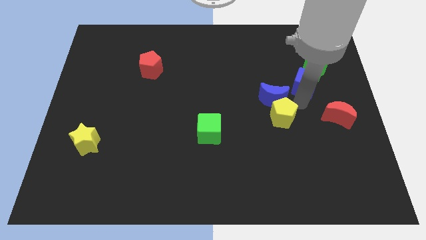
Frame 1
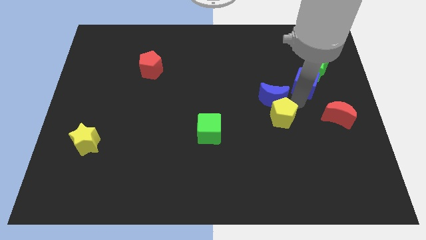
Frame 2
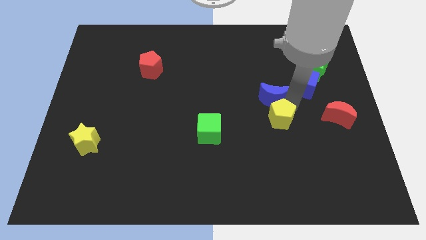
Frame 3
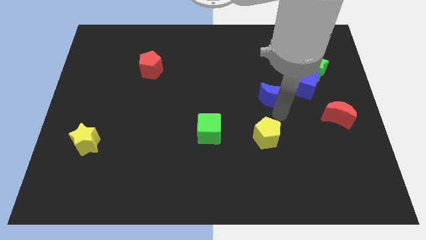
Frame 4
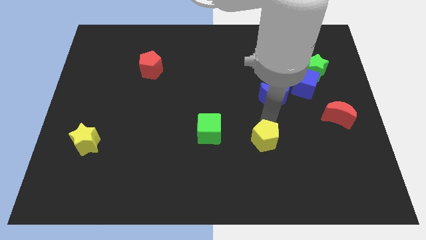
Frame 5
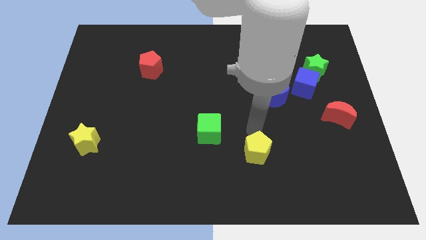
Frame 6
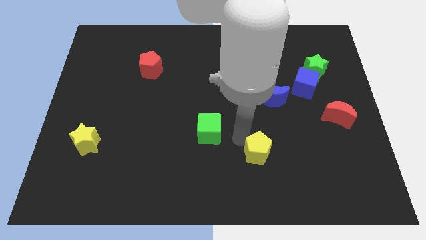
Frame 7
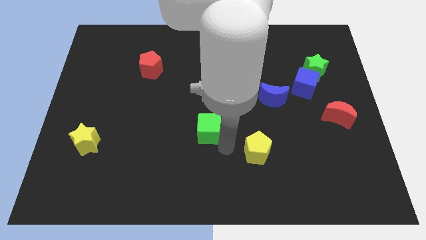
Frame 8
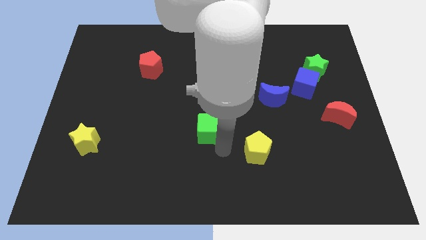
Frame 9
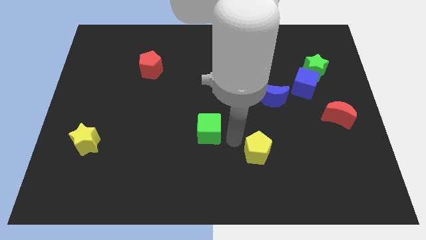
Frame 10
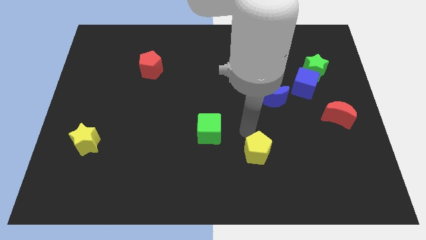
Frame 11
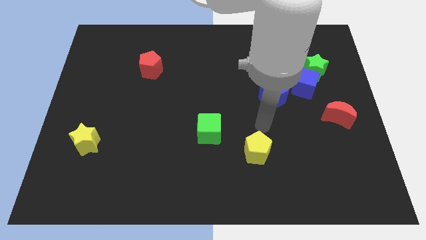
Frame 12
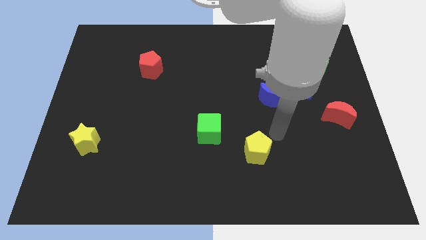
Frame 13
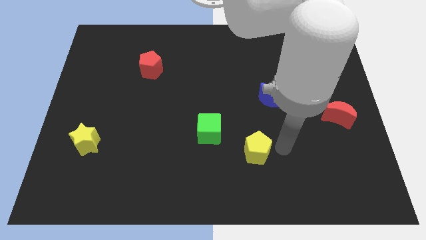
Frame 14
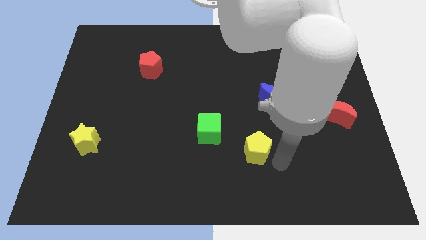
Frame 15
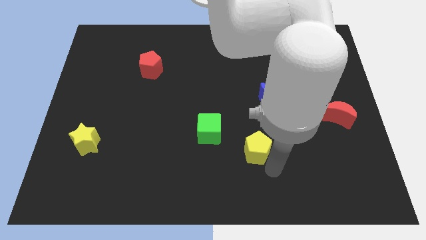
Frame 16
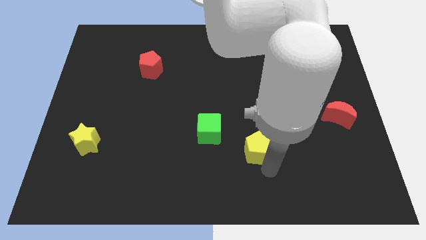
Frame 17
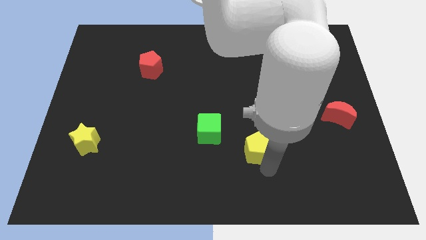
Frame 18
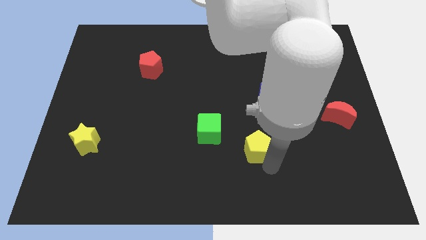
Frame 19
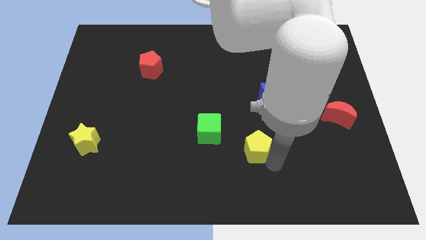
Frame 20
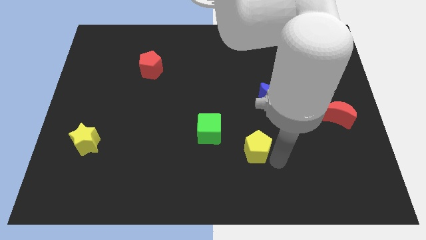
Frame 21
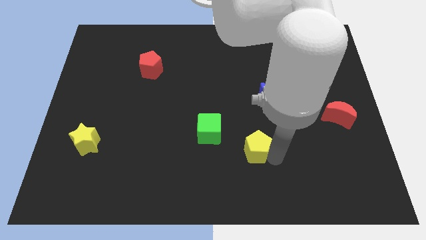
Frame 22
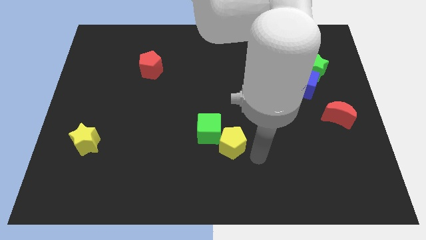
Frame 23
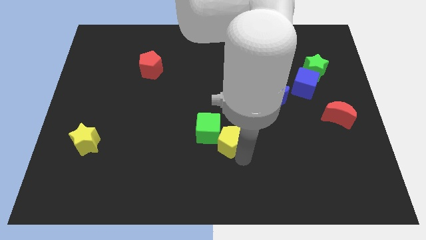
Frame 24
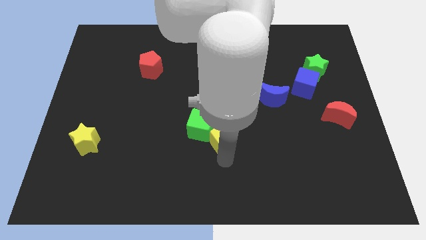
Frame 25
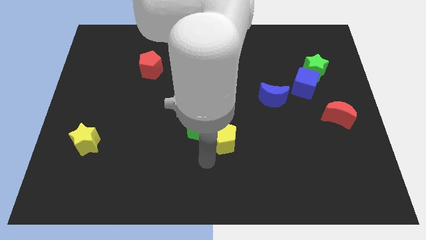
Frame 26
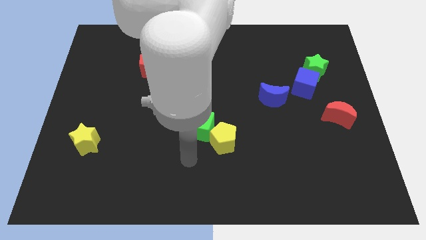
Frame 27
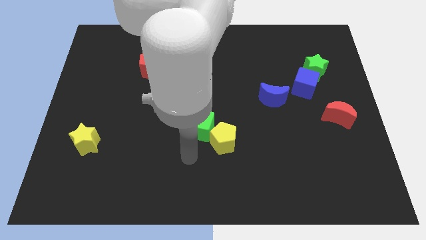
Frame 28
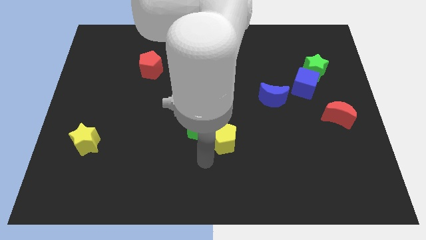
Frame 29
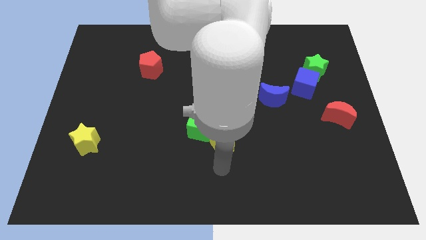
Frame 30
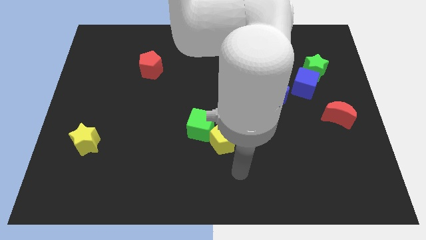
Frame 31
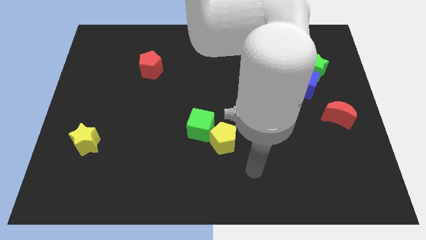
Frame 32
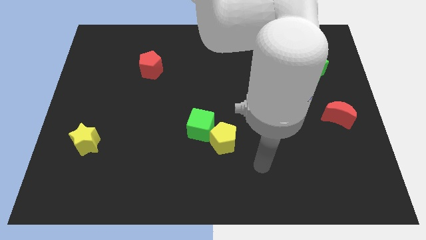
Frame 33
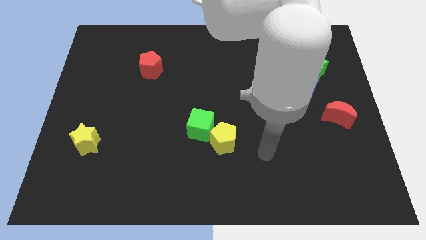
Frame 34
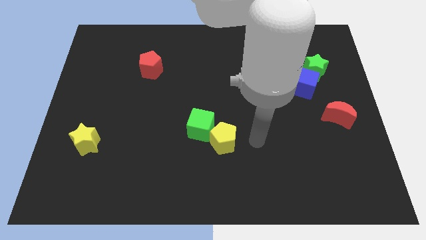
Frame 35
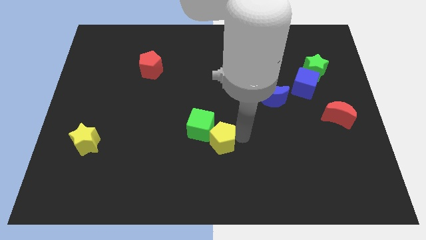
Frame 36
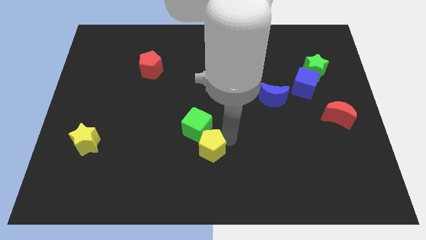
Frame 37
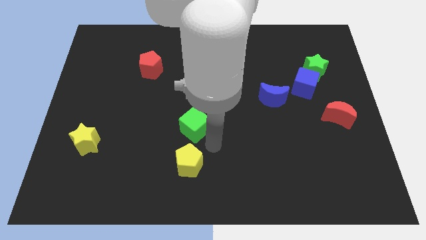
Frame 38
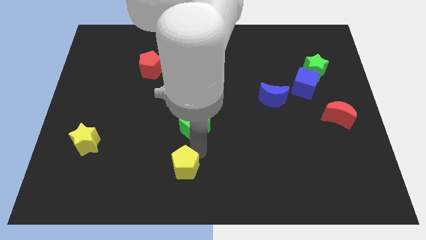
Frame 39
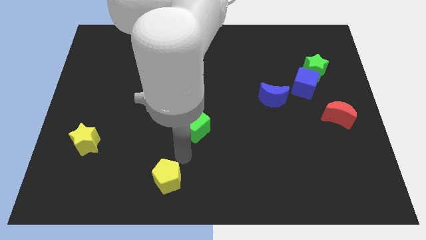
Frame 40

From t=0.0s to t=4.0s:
push the yellow pentagon to the bottom of the green cube

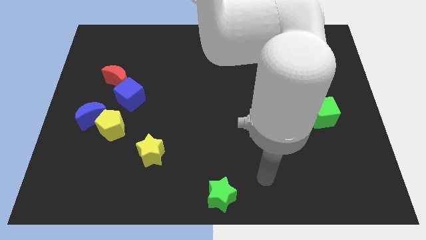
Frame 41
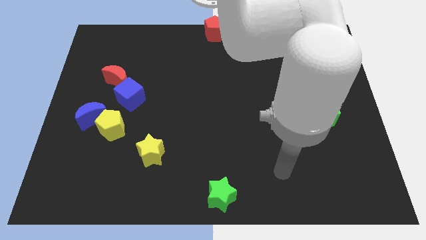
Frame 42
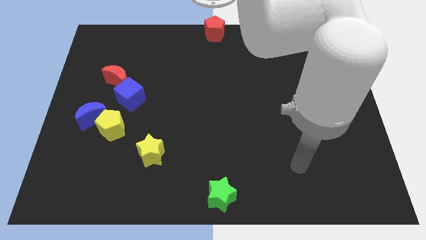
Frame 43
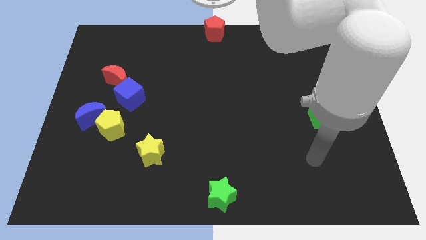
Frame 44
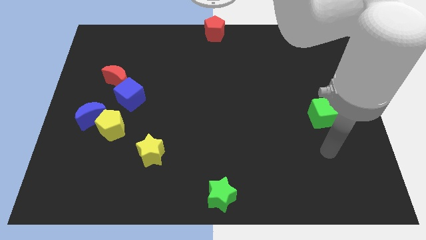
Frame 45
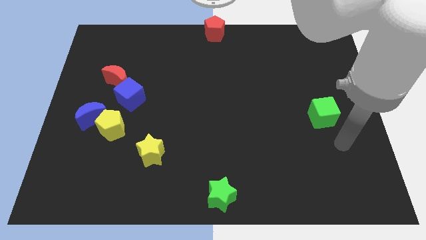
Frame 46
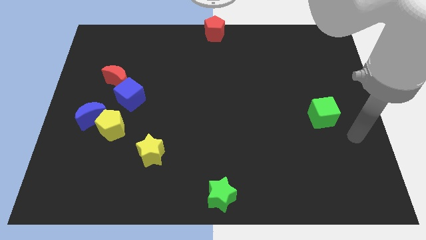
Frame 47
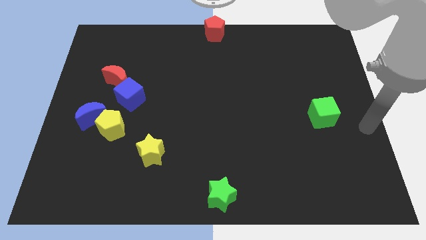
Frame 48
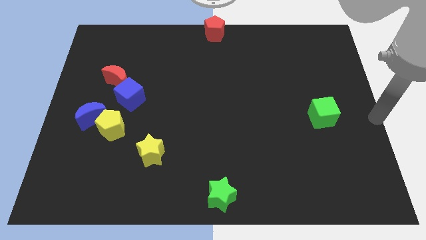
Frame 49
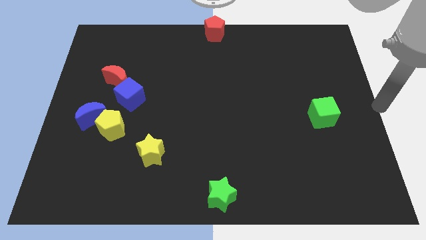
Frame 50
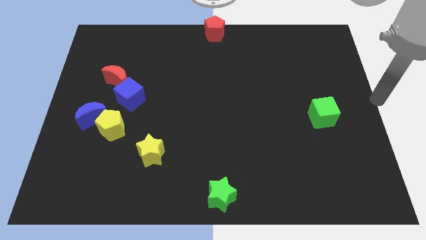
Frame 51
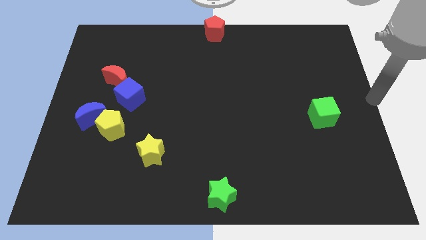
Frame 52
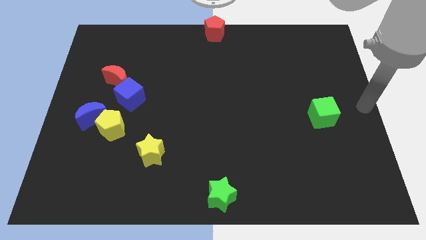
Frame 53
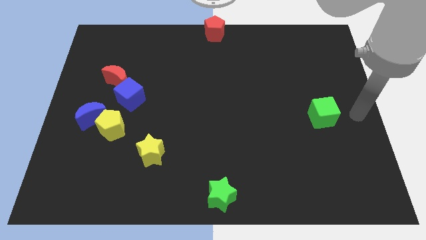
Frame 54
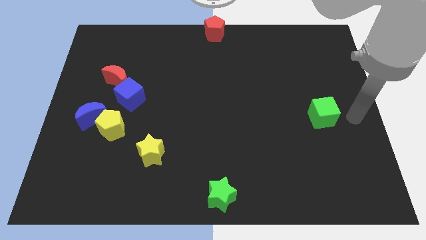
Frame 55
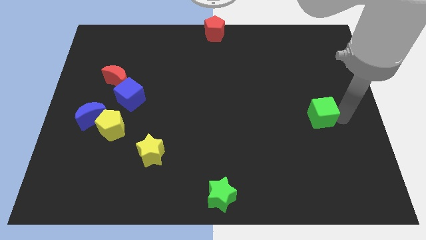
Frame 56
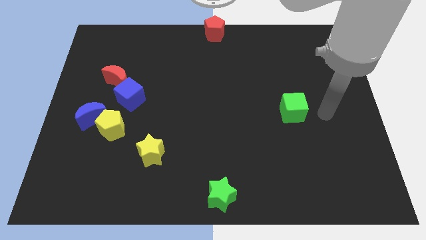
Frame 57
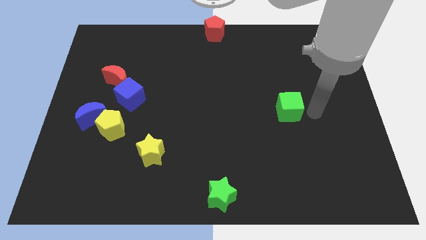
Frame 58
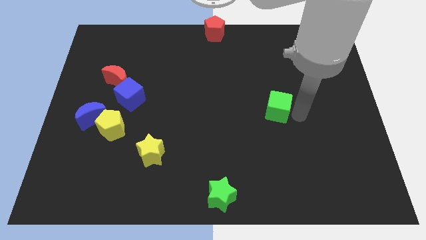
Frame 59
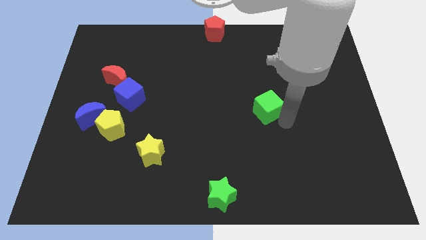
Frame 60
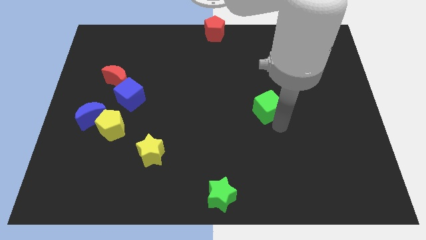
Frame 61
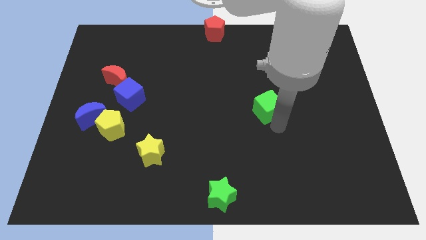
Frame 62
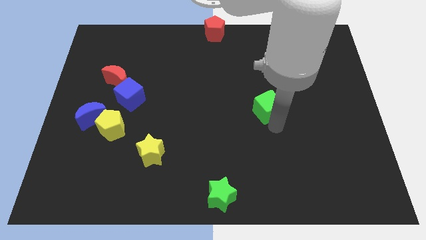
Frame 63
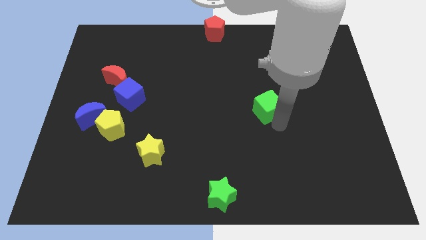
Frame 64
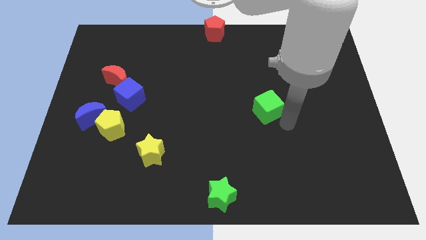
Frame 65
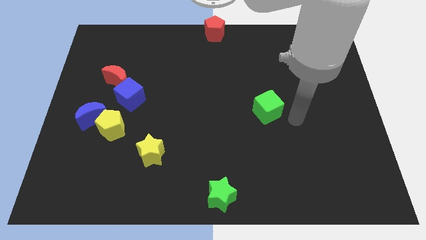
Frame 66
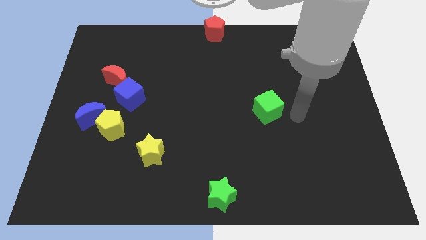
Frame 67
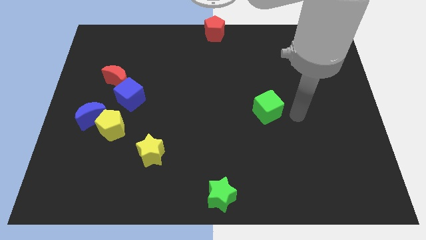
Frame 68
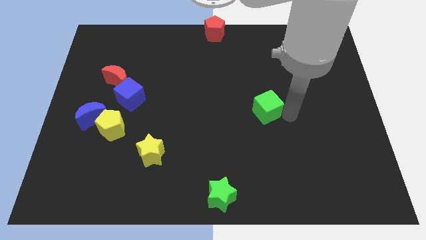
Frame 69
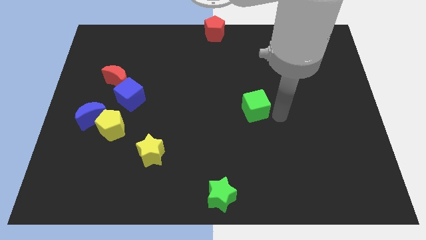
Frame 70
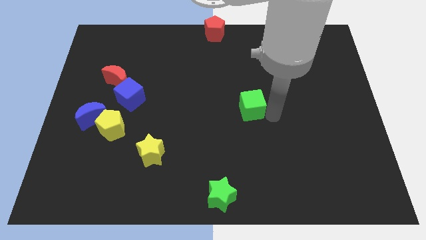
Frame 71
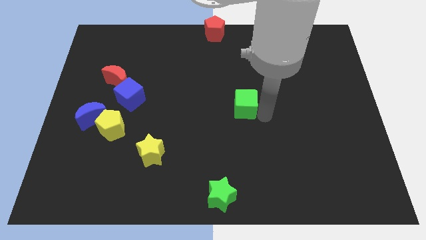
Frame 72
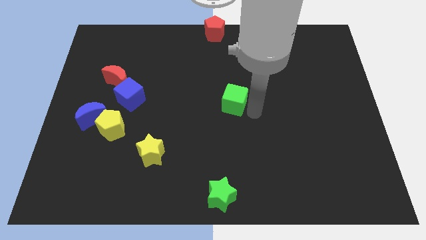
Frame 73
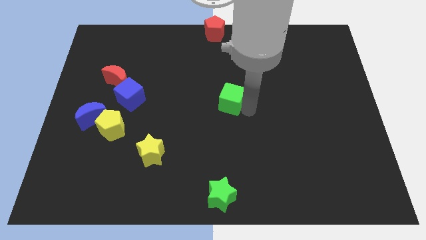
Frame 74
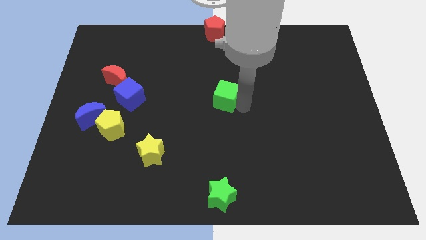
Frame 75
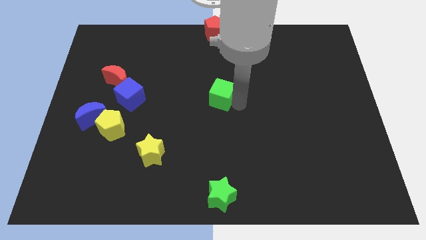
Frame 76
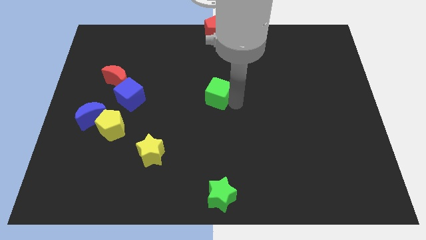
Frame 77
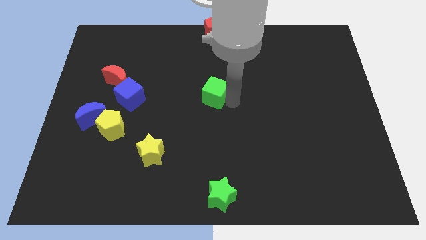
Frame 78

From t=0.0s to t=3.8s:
push the green cube to the center of the board

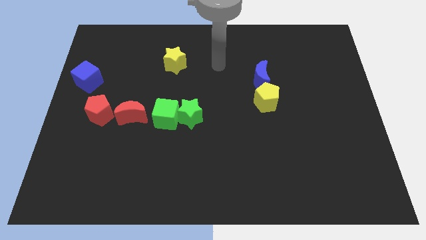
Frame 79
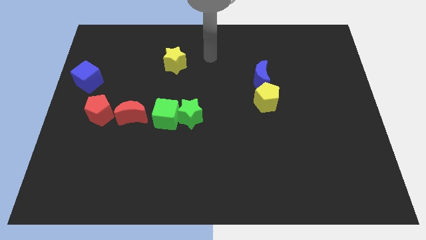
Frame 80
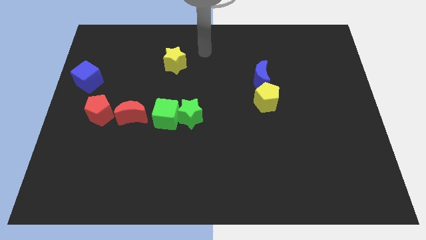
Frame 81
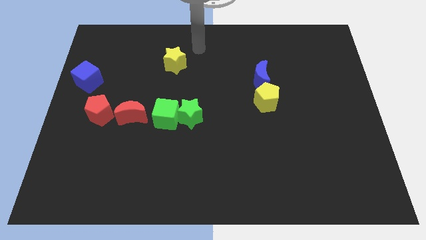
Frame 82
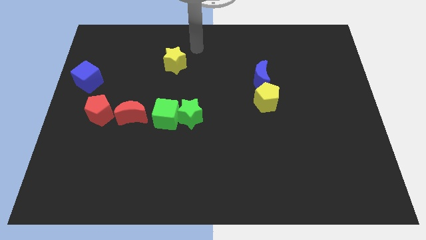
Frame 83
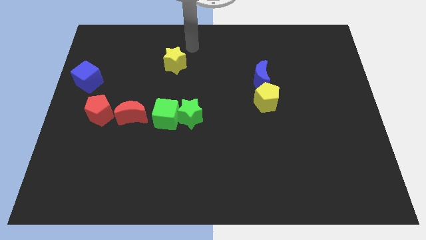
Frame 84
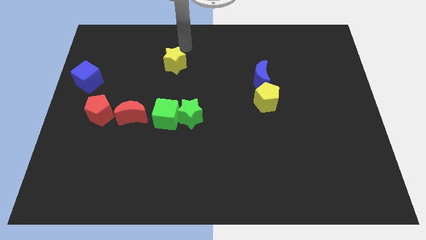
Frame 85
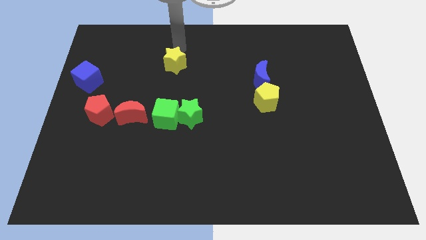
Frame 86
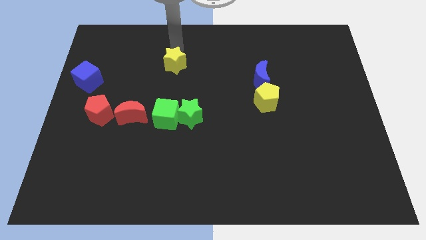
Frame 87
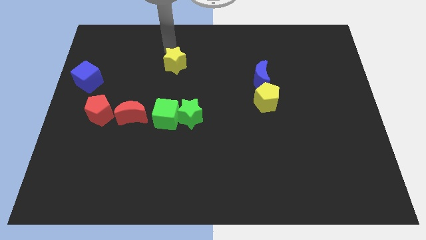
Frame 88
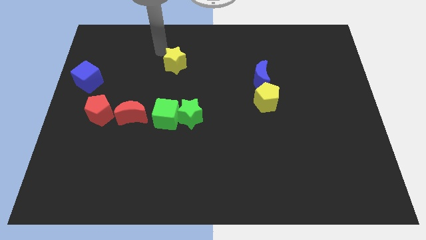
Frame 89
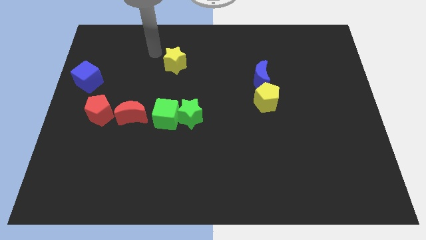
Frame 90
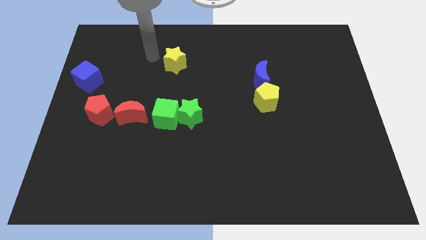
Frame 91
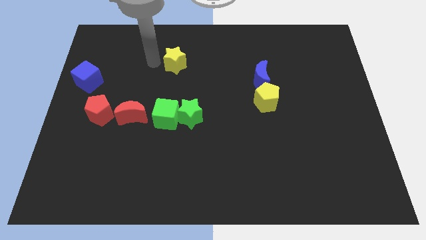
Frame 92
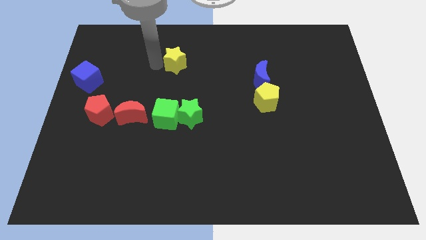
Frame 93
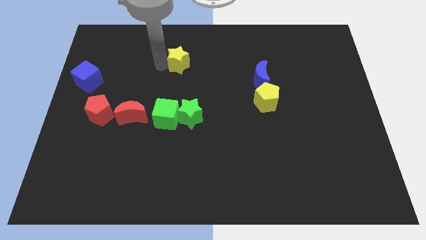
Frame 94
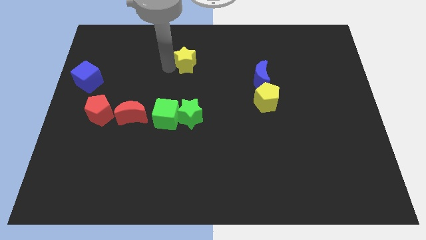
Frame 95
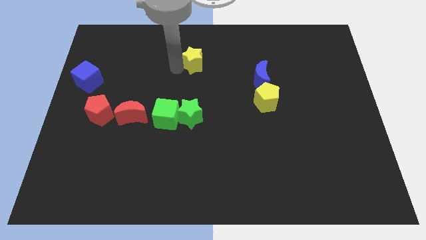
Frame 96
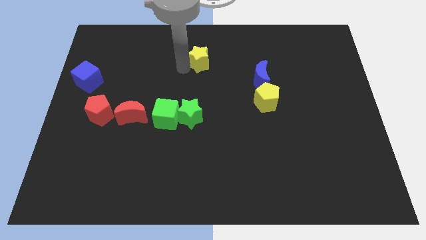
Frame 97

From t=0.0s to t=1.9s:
push yellow star above green star
